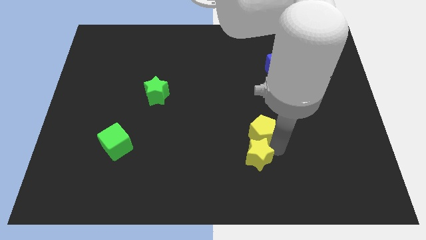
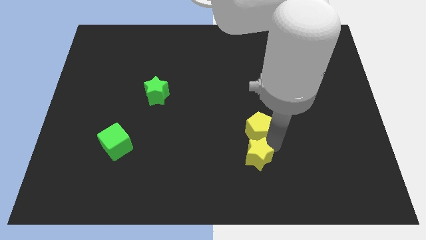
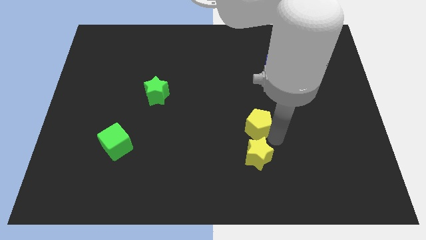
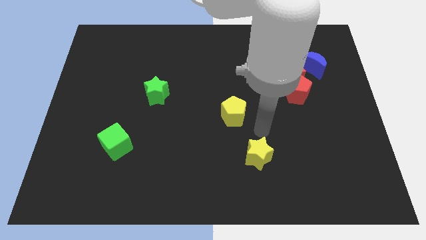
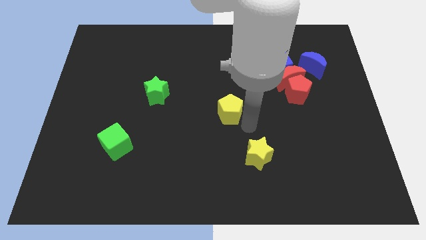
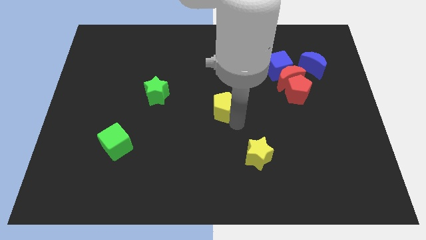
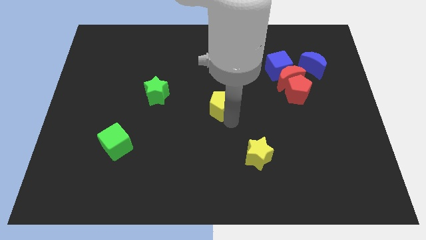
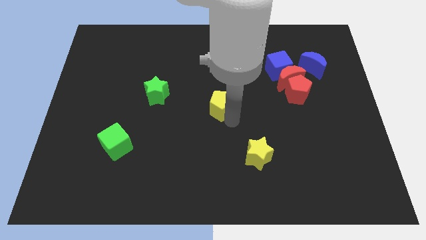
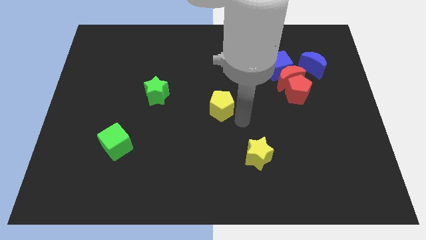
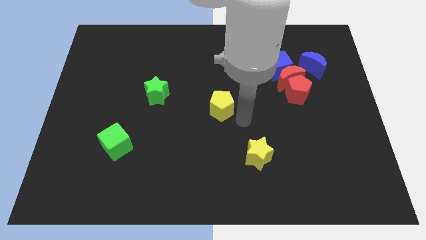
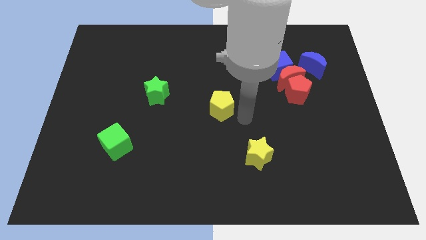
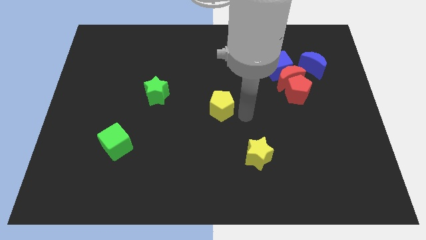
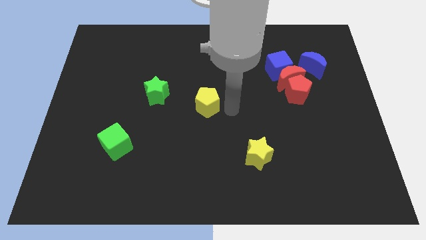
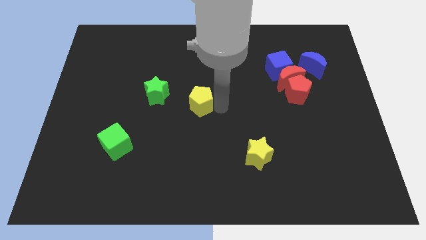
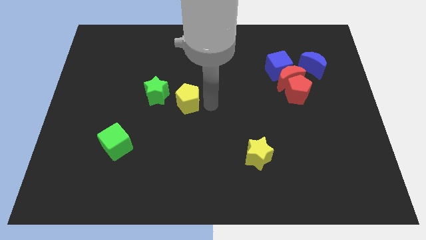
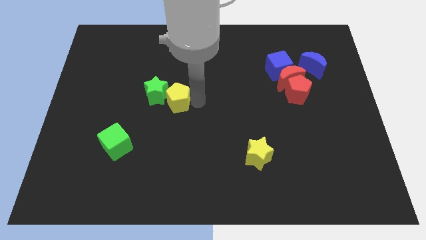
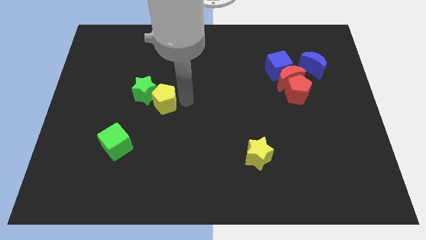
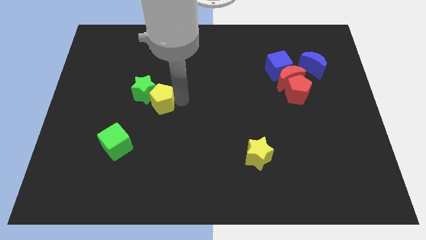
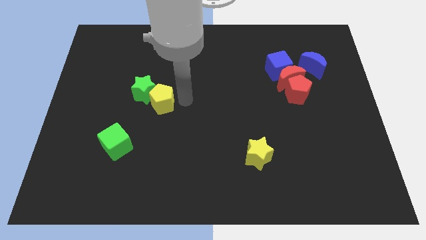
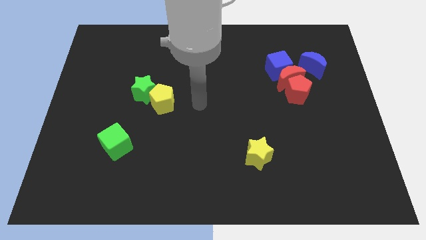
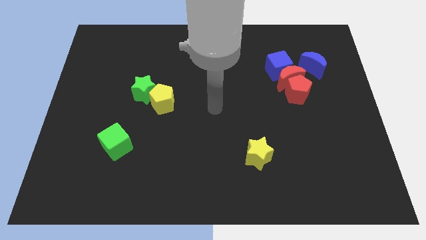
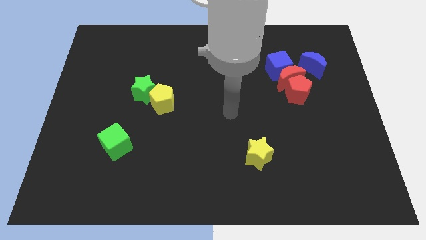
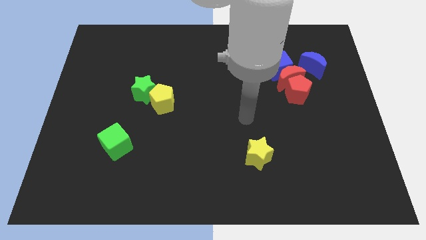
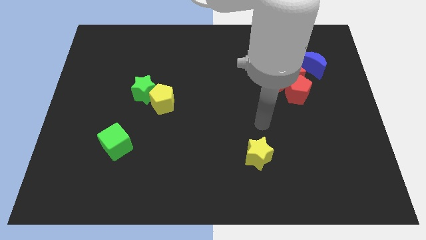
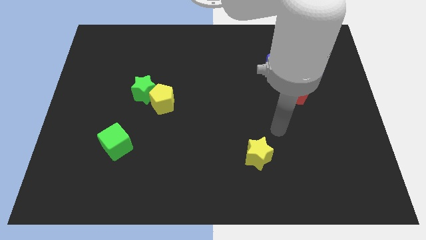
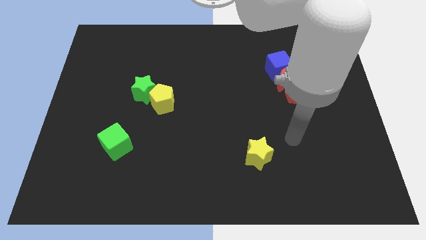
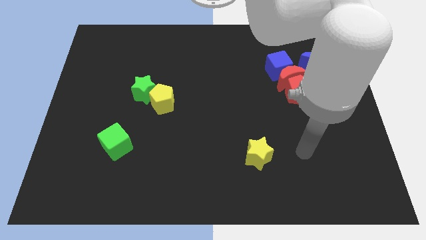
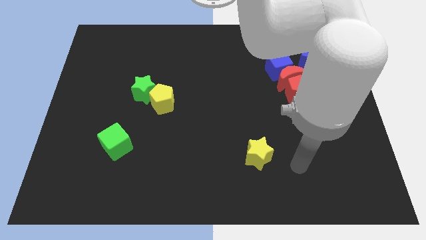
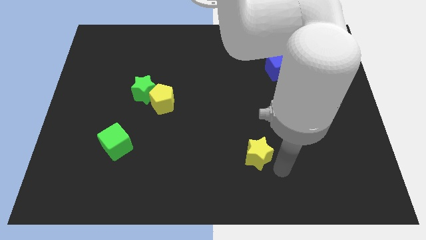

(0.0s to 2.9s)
push the yellow pentagon into the green star

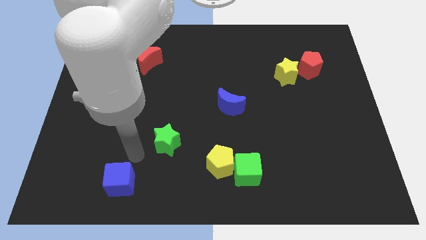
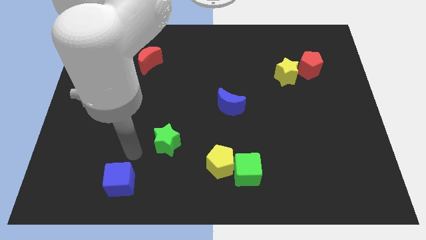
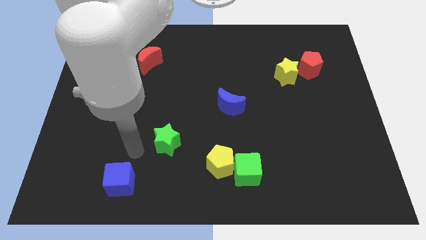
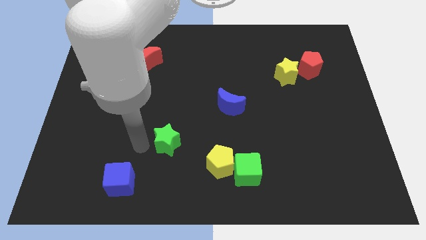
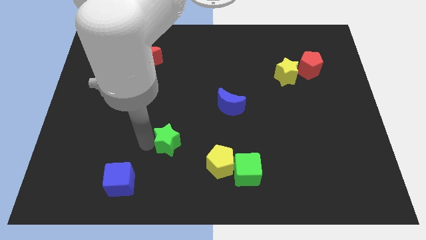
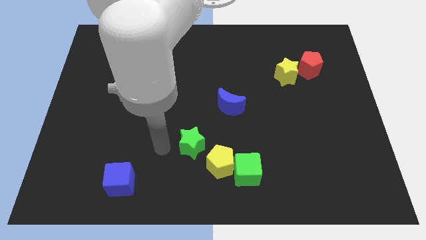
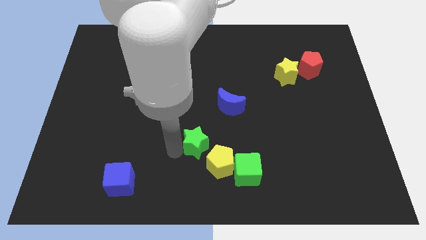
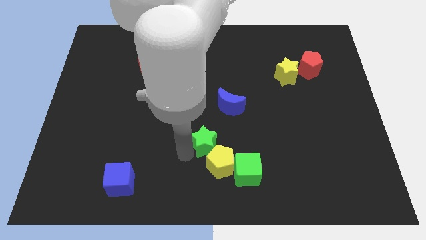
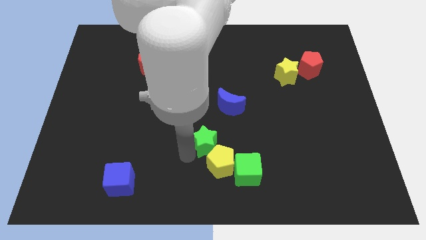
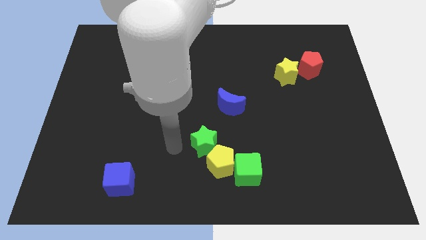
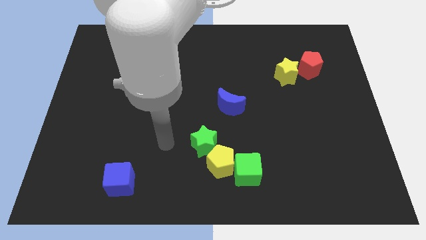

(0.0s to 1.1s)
move green star on top left of yellow pentagon

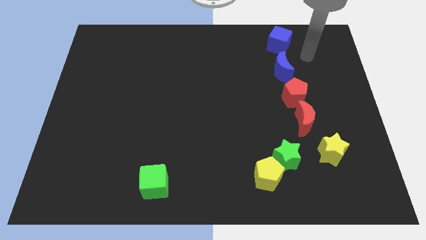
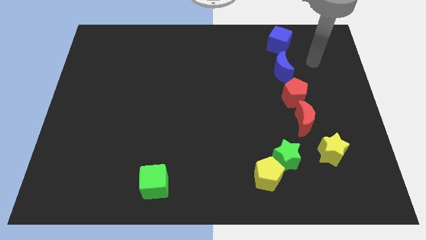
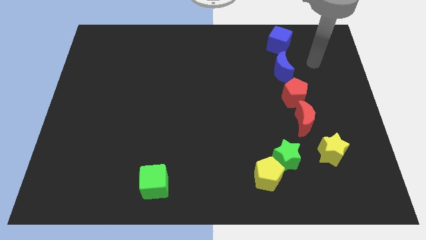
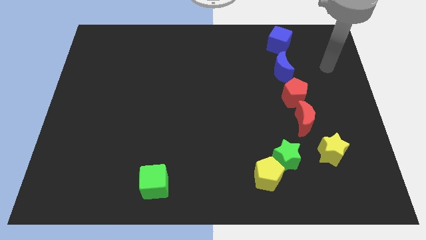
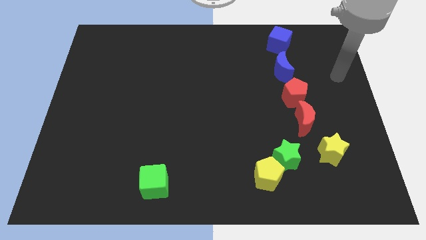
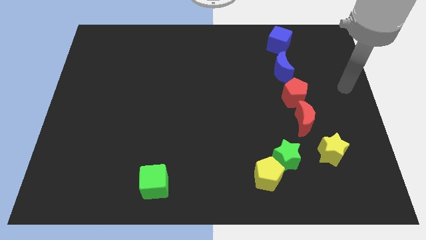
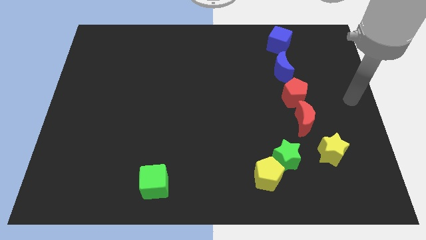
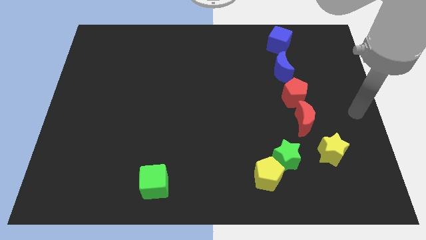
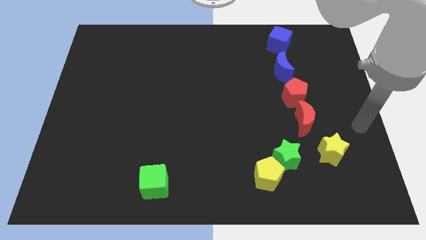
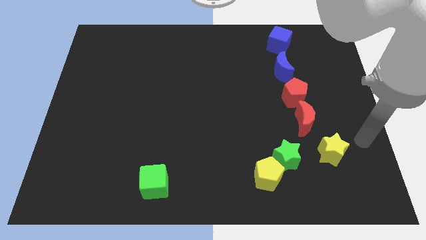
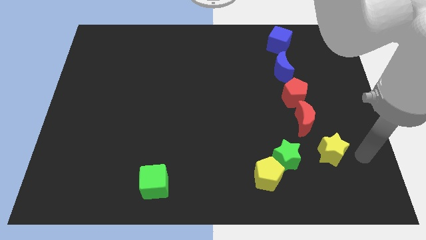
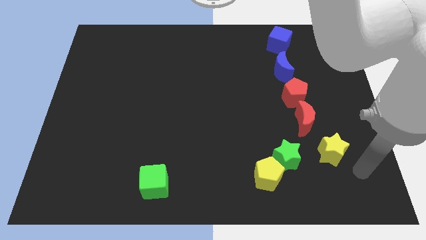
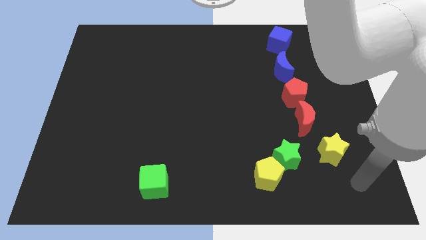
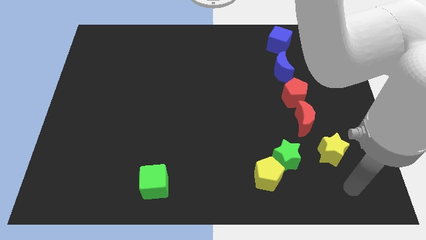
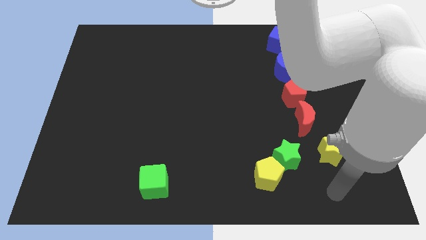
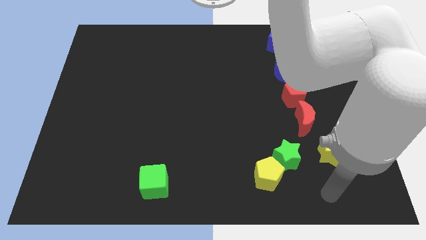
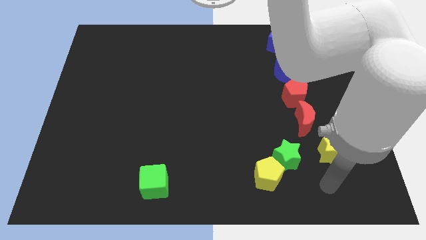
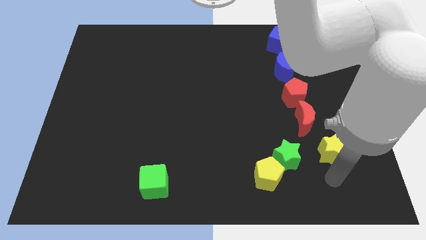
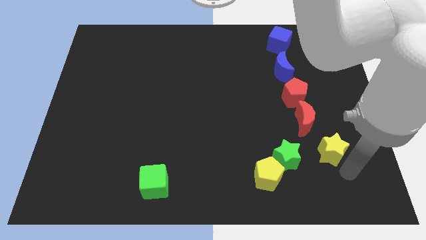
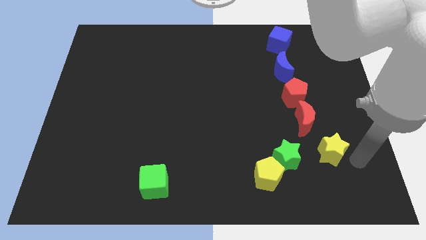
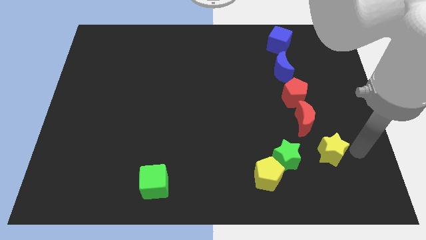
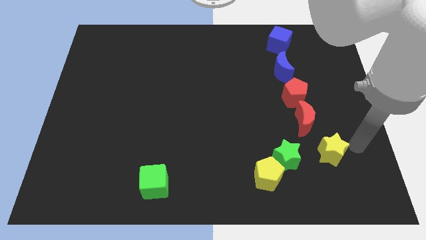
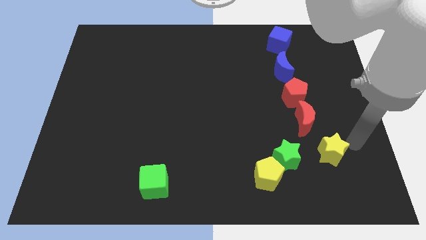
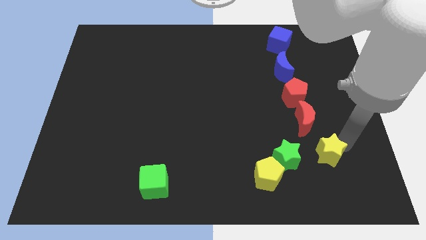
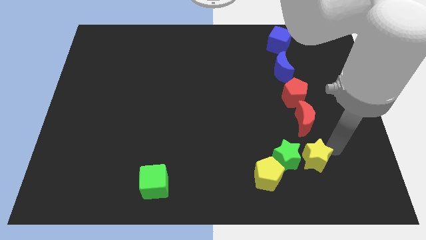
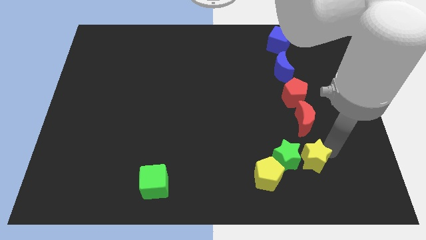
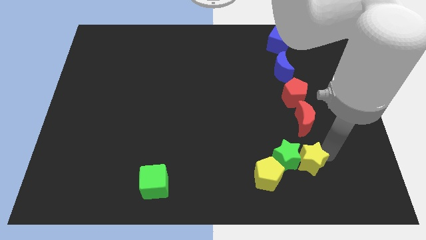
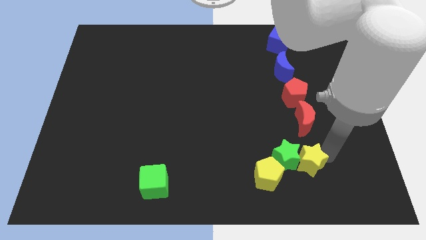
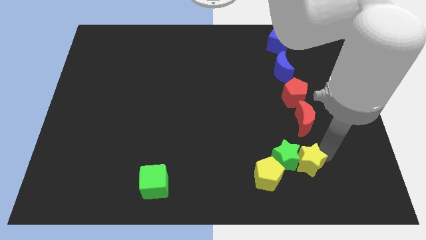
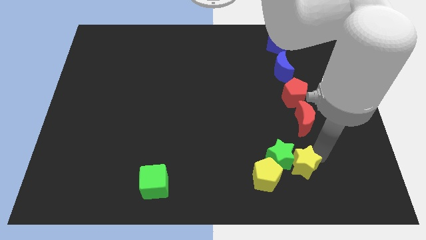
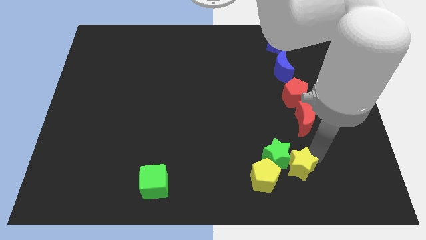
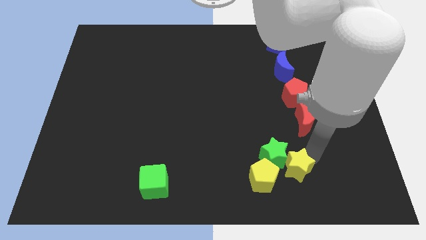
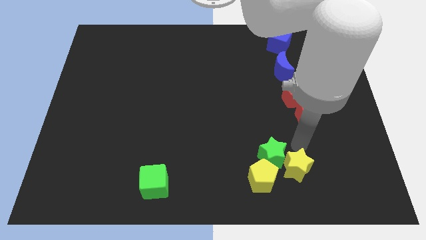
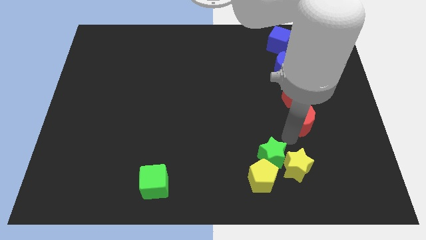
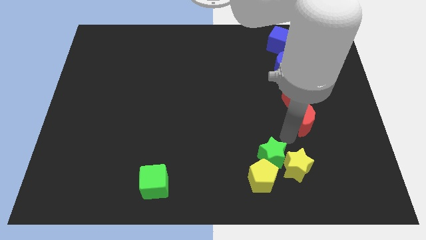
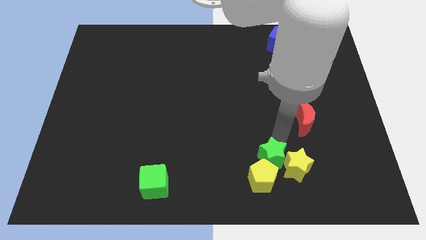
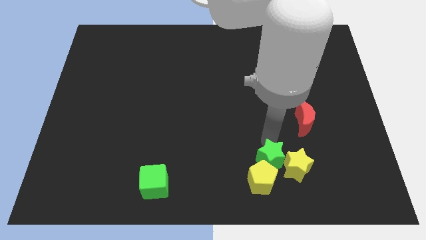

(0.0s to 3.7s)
move the yellow star into the right side of the green star

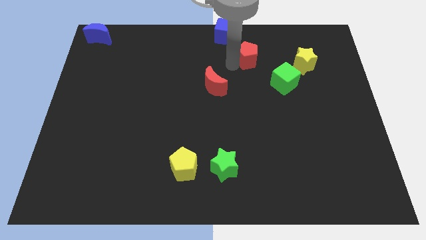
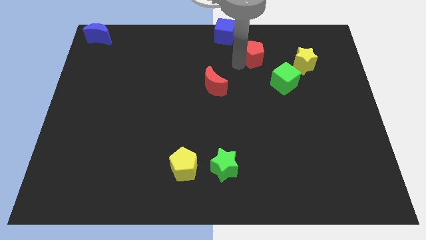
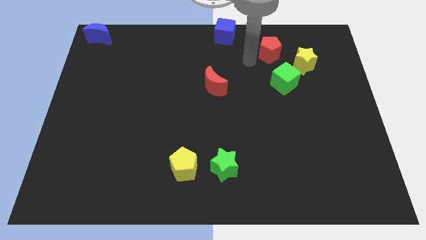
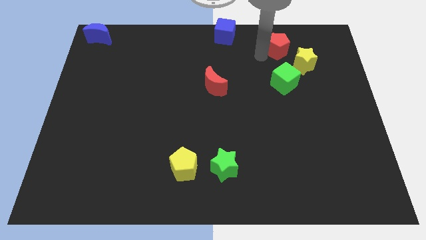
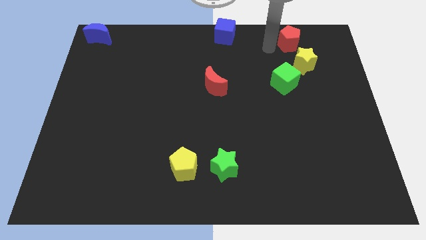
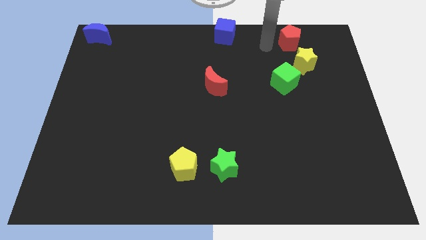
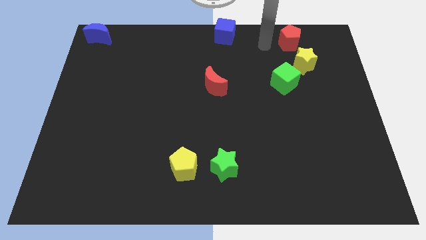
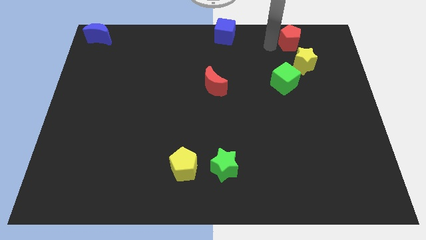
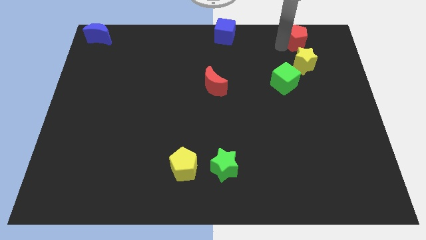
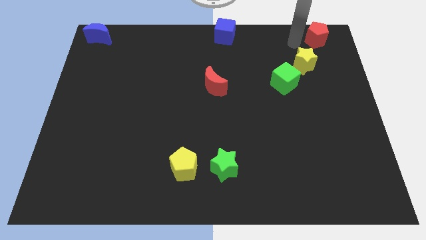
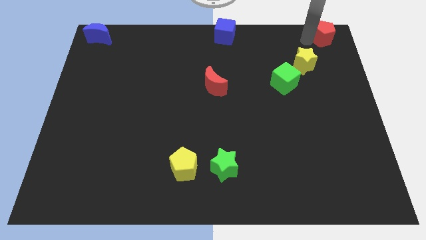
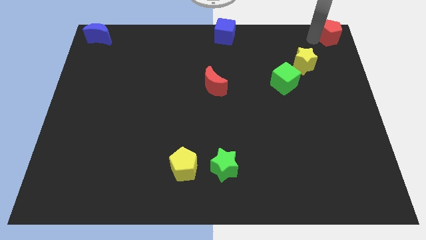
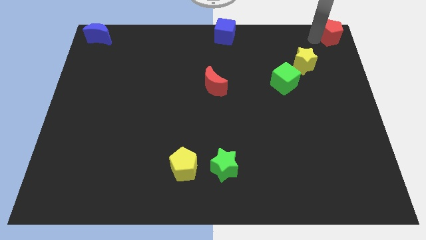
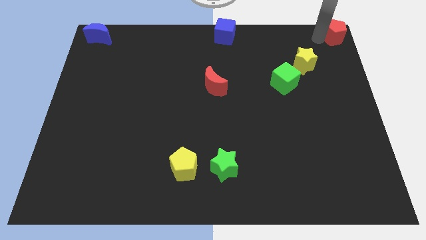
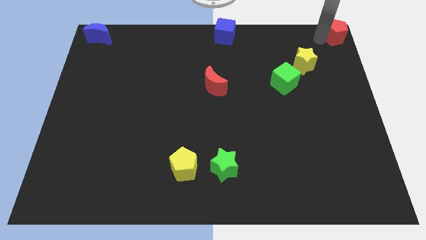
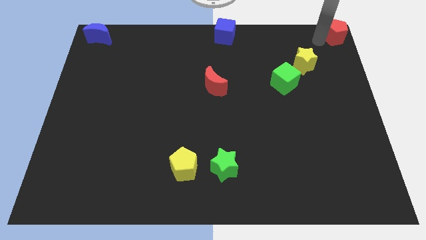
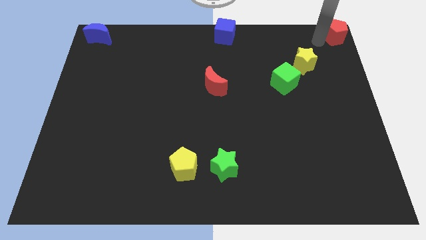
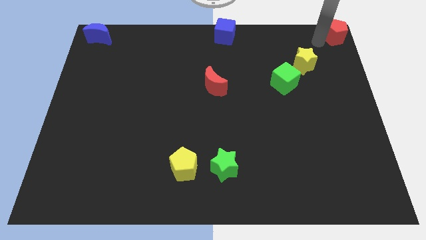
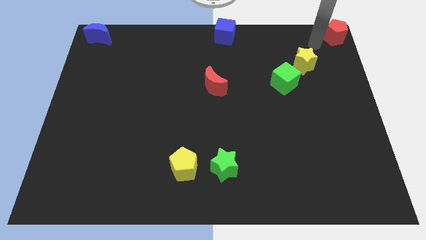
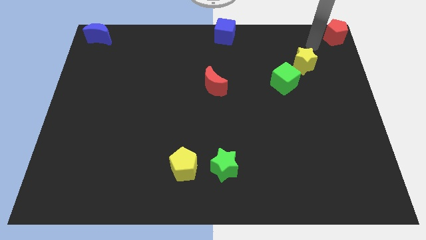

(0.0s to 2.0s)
push the red pentagon to the top right corner of the board
